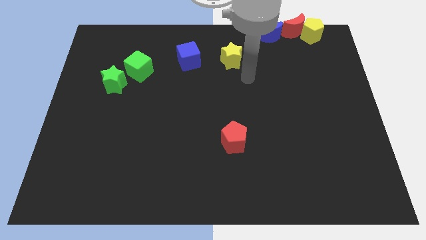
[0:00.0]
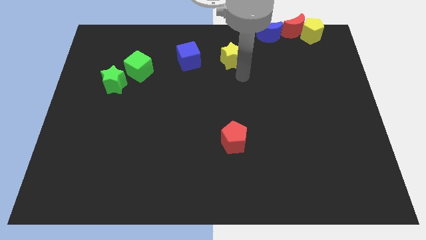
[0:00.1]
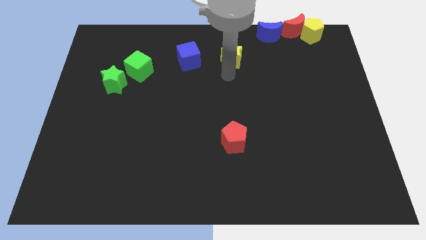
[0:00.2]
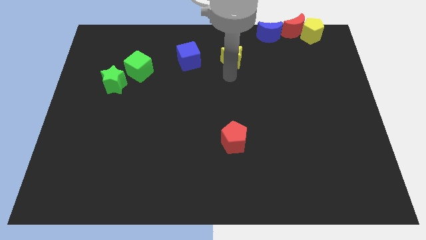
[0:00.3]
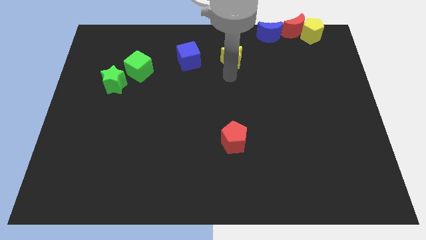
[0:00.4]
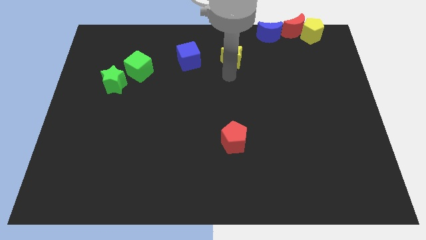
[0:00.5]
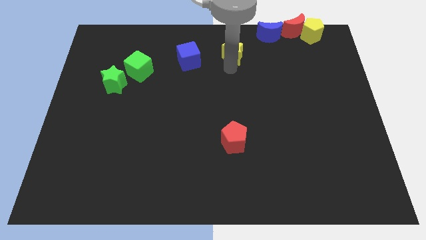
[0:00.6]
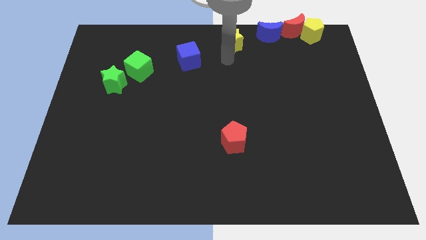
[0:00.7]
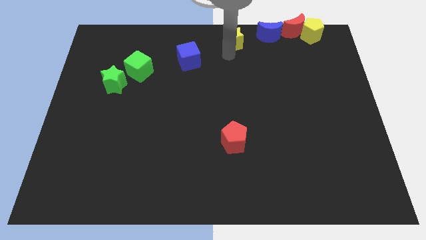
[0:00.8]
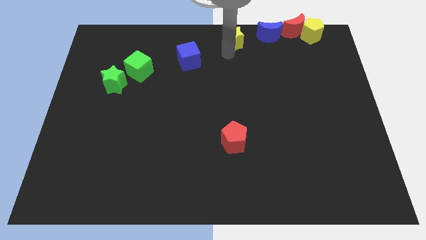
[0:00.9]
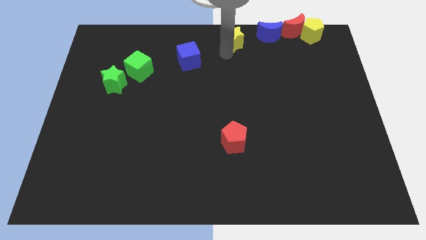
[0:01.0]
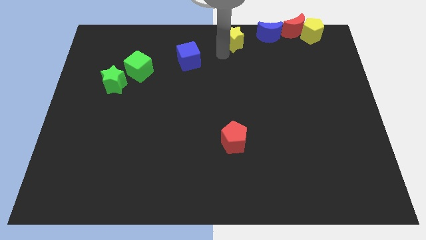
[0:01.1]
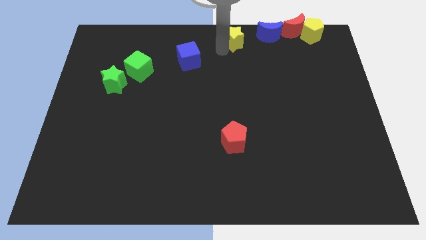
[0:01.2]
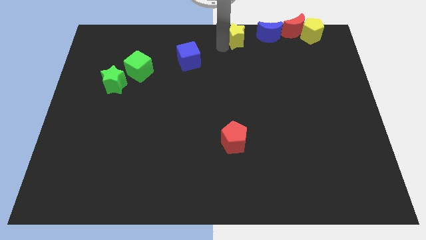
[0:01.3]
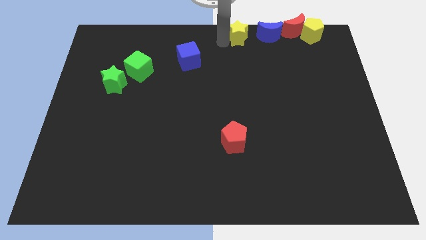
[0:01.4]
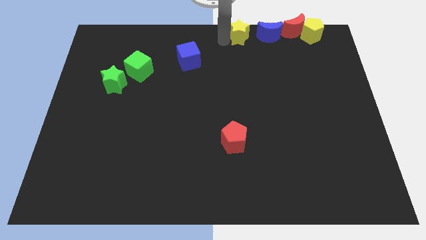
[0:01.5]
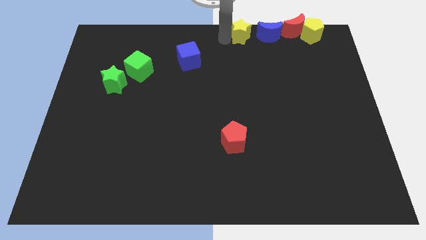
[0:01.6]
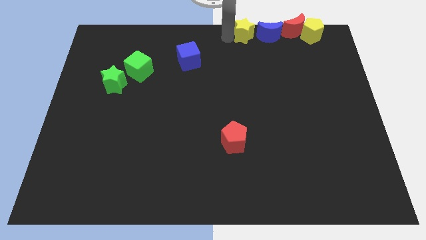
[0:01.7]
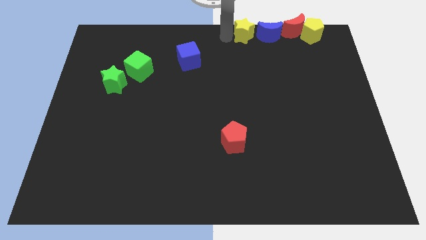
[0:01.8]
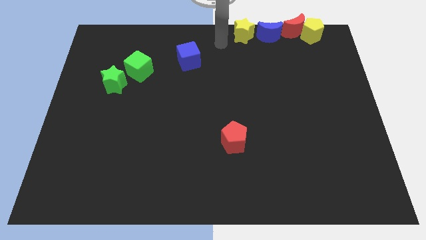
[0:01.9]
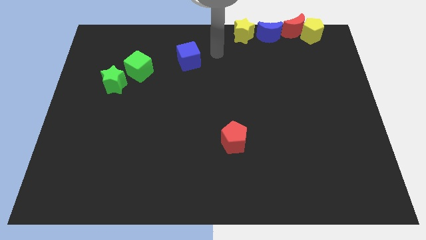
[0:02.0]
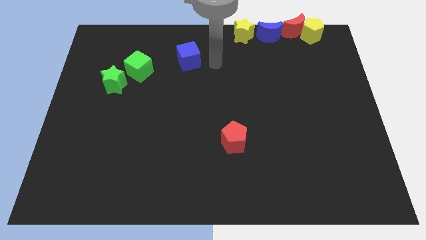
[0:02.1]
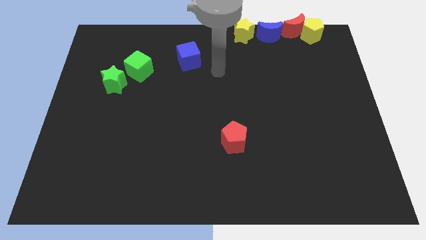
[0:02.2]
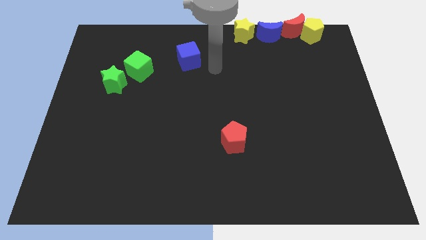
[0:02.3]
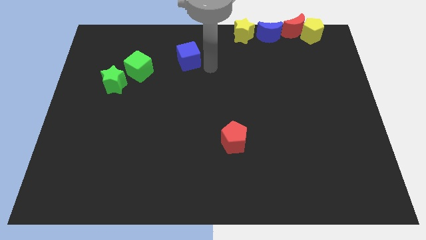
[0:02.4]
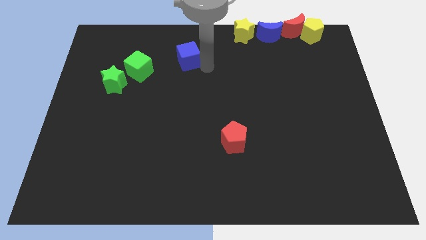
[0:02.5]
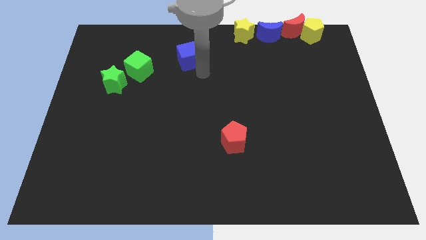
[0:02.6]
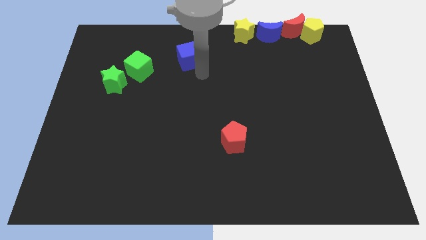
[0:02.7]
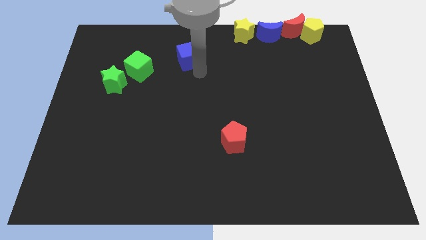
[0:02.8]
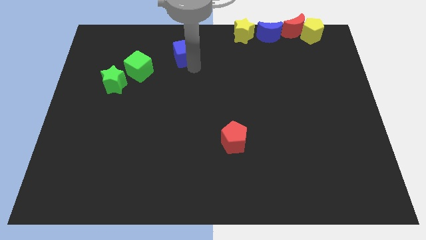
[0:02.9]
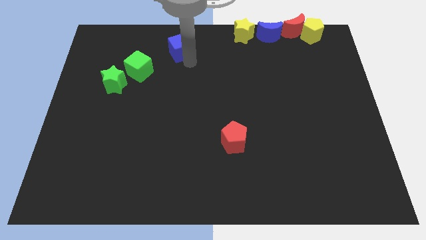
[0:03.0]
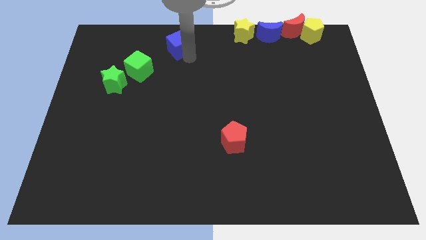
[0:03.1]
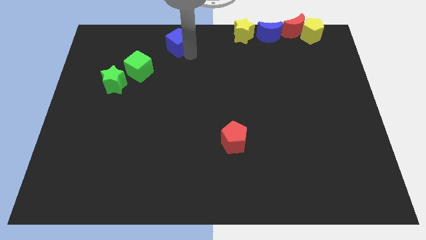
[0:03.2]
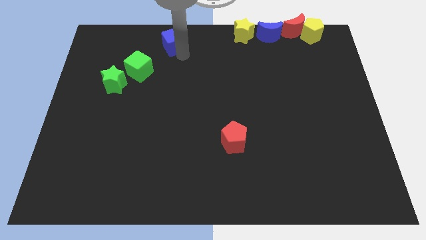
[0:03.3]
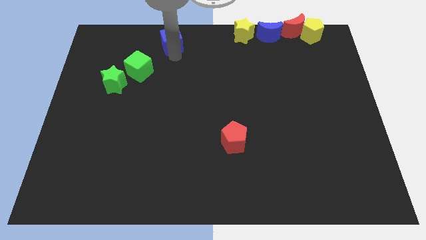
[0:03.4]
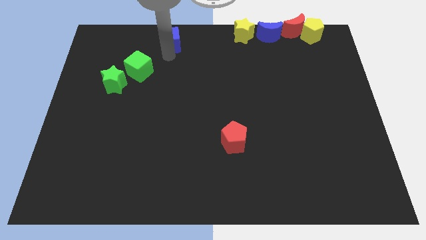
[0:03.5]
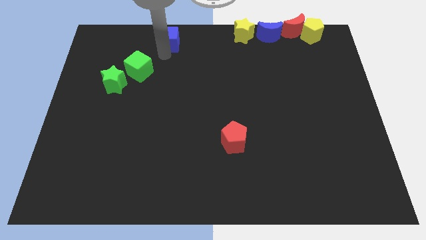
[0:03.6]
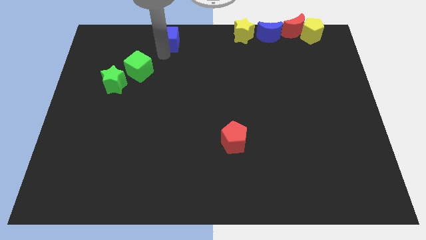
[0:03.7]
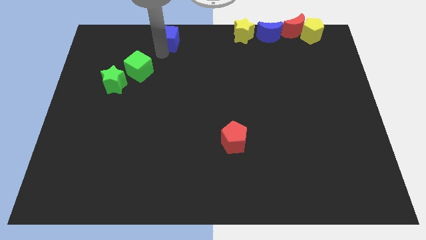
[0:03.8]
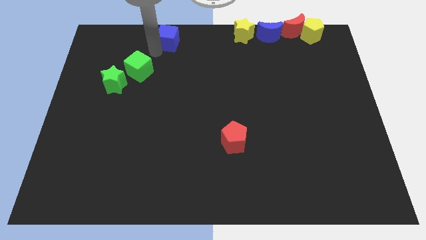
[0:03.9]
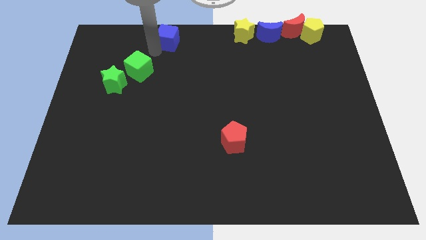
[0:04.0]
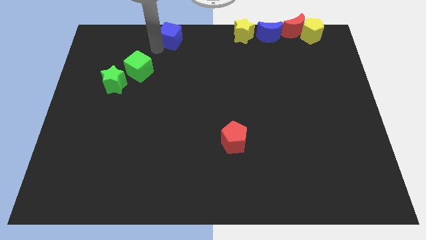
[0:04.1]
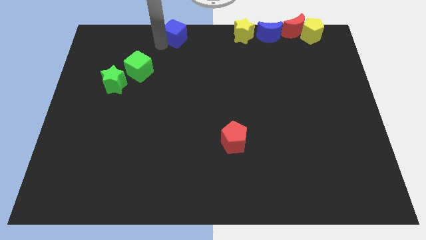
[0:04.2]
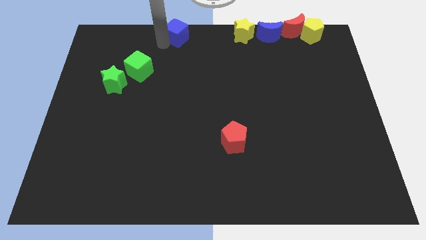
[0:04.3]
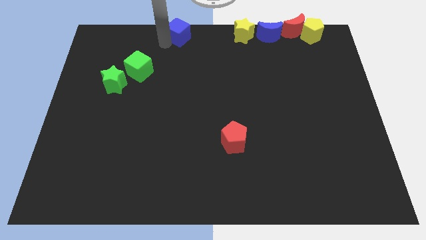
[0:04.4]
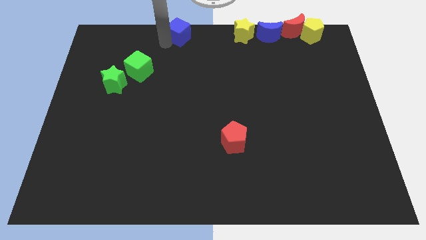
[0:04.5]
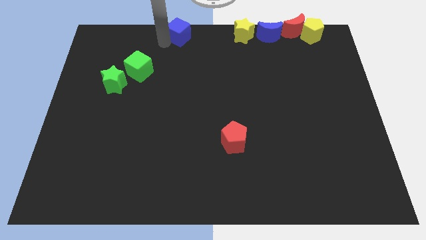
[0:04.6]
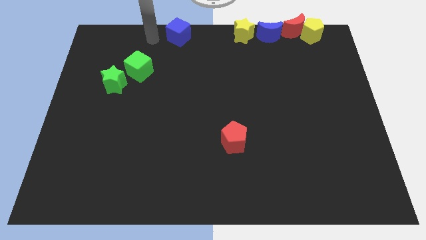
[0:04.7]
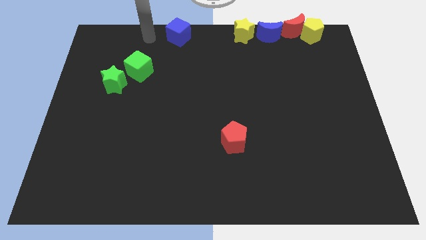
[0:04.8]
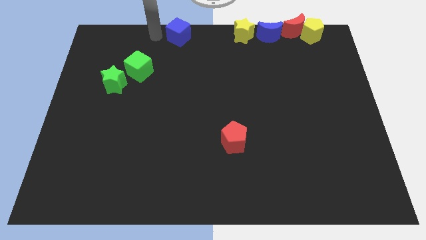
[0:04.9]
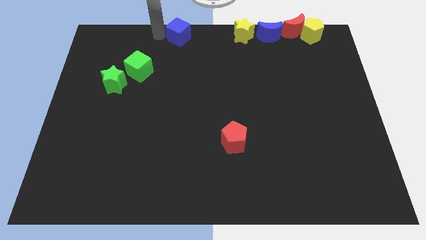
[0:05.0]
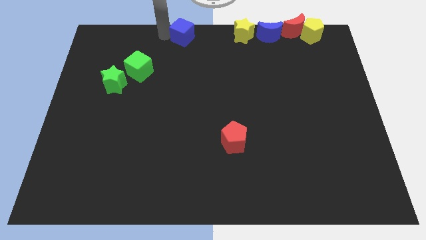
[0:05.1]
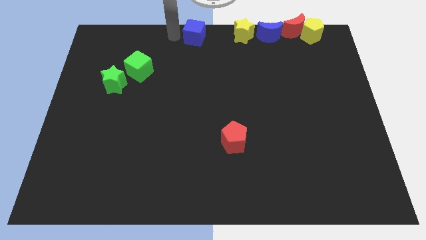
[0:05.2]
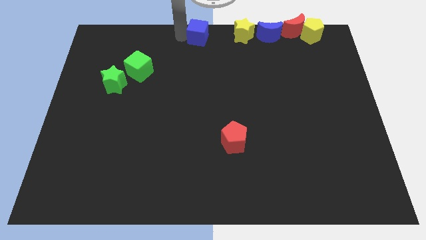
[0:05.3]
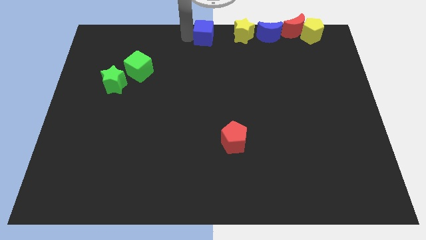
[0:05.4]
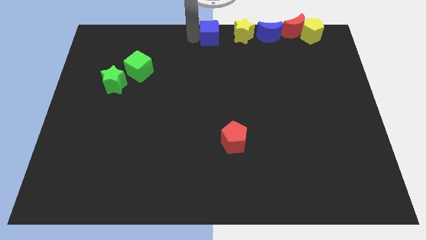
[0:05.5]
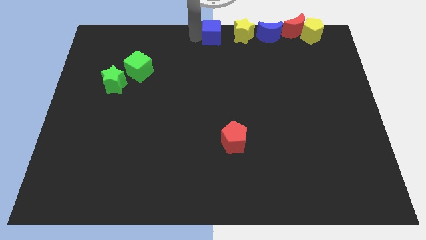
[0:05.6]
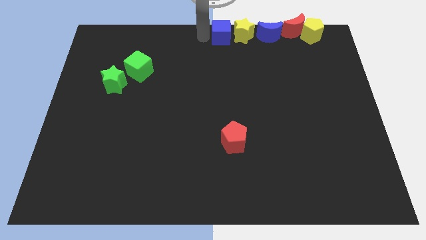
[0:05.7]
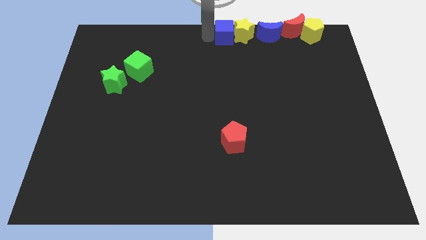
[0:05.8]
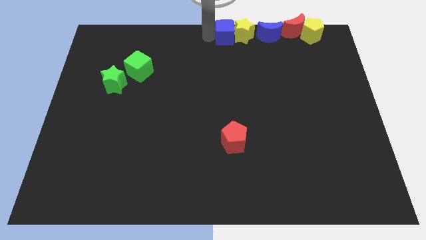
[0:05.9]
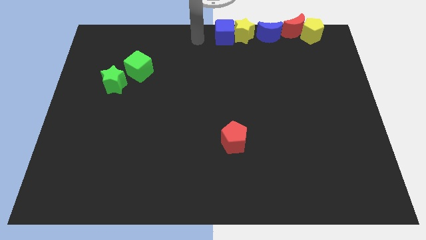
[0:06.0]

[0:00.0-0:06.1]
move the yellow star and blue cube to the left of the blue crescent

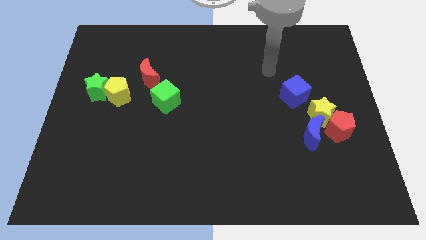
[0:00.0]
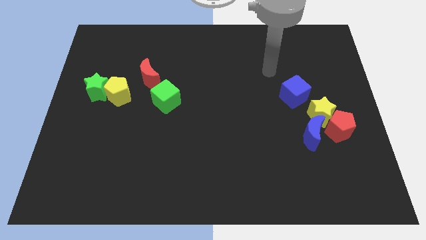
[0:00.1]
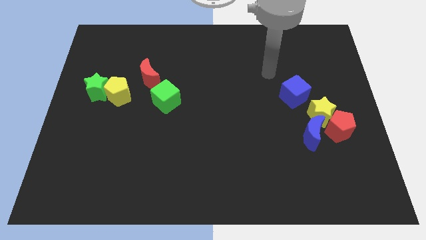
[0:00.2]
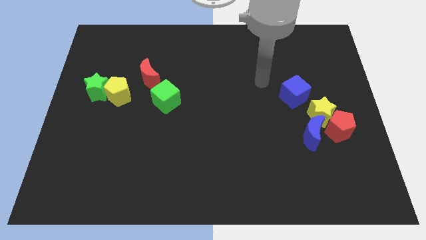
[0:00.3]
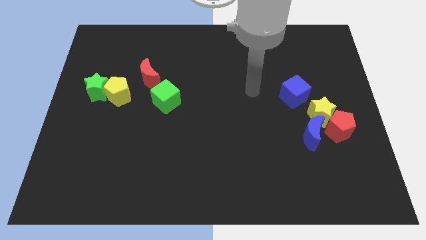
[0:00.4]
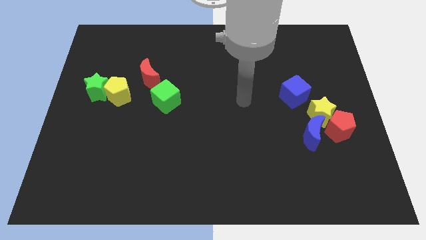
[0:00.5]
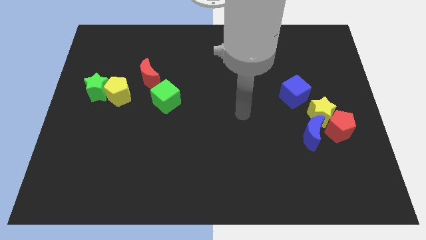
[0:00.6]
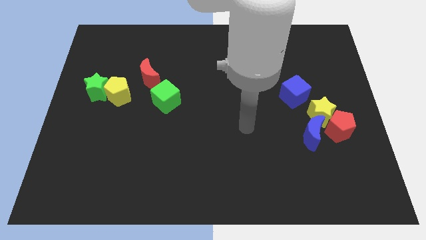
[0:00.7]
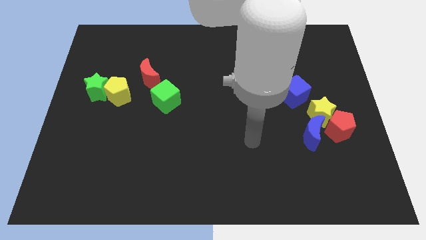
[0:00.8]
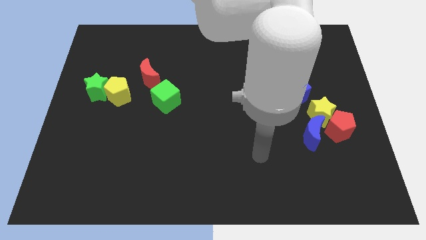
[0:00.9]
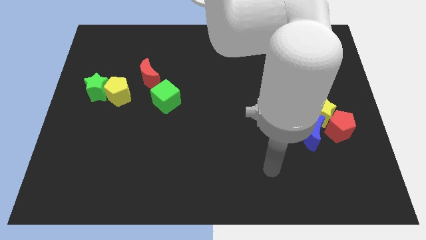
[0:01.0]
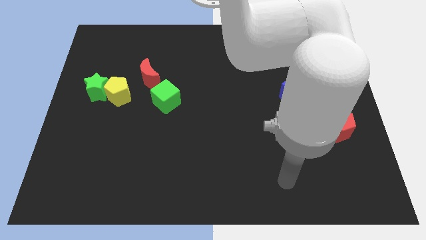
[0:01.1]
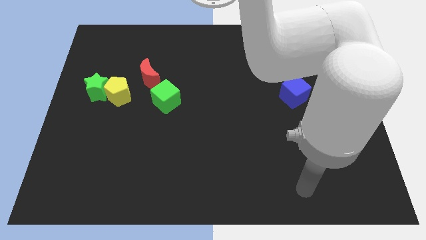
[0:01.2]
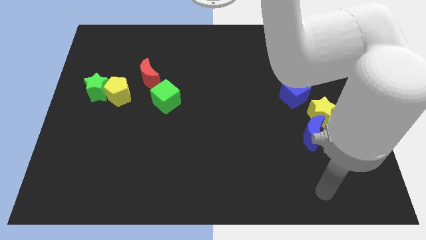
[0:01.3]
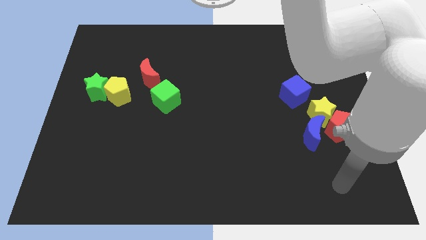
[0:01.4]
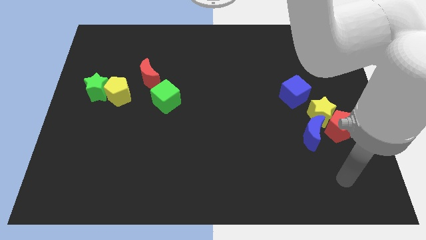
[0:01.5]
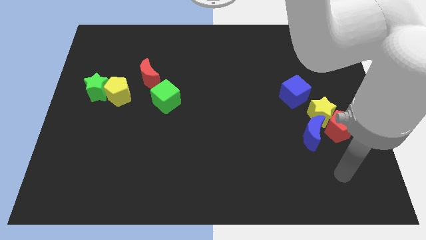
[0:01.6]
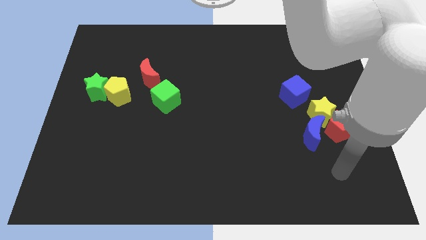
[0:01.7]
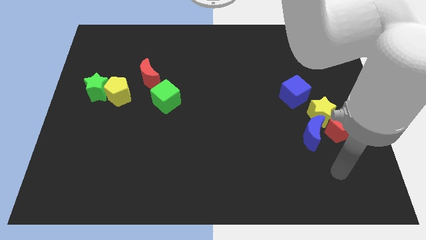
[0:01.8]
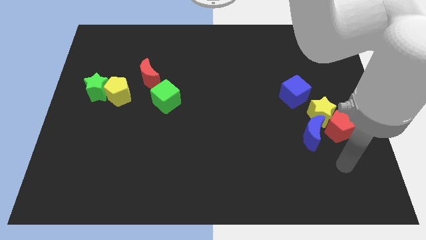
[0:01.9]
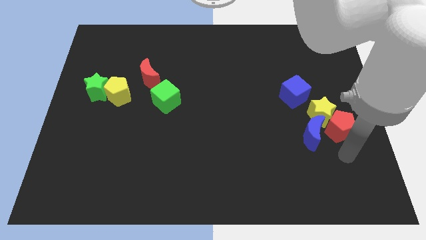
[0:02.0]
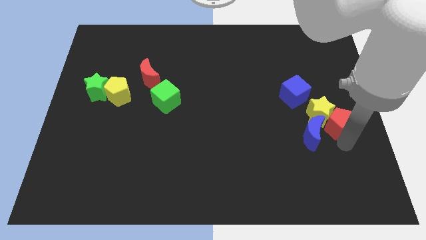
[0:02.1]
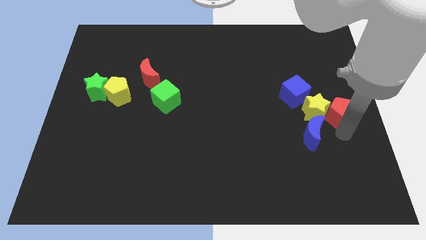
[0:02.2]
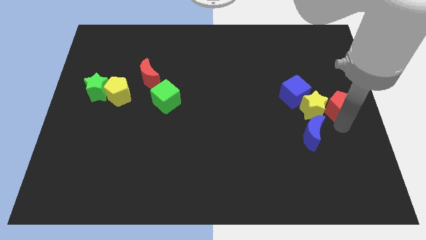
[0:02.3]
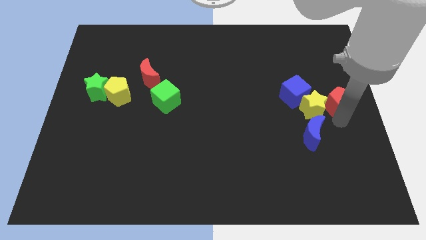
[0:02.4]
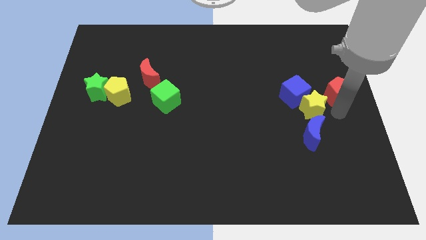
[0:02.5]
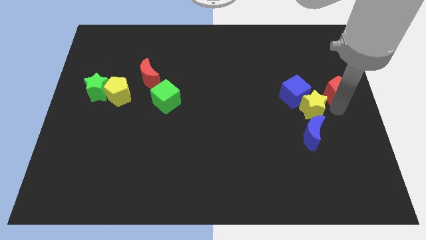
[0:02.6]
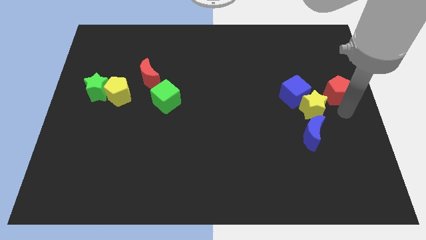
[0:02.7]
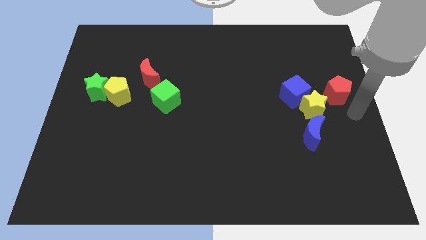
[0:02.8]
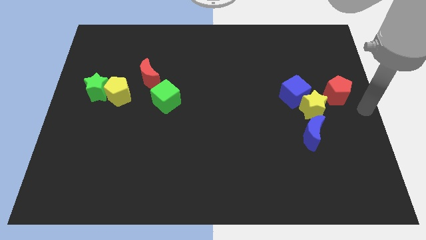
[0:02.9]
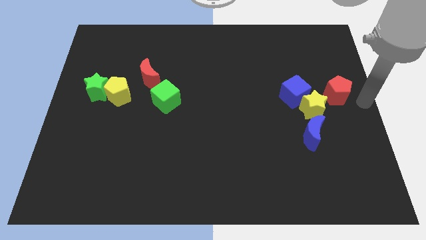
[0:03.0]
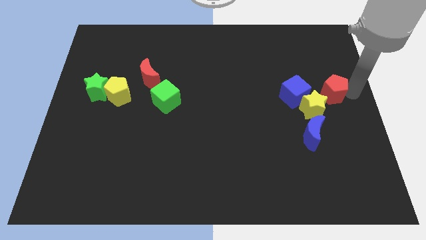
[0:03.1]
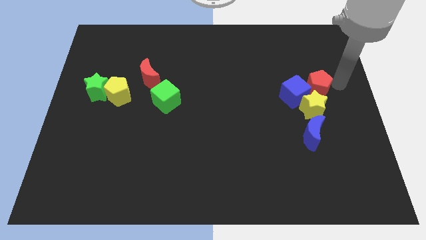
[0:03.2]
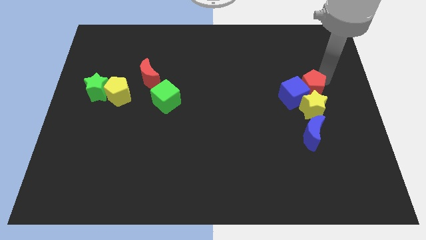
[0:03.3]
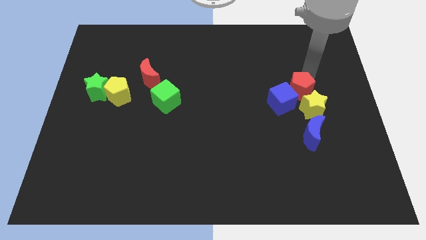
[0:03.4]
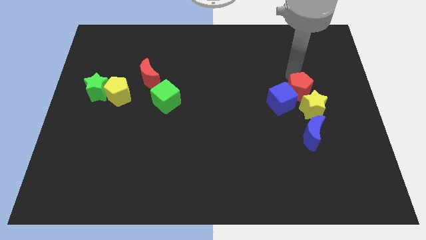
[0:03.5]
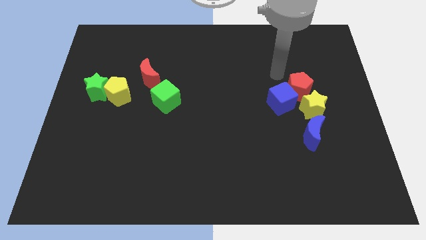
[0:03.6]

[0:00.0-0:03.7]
move the red pentagon close to the blue cube
